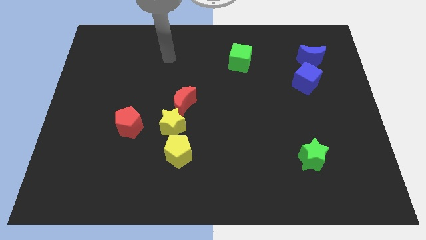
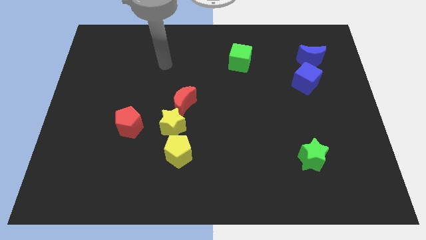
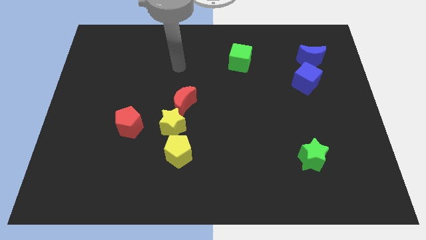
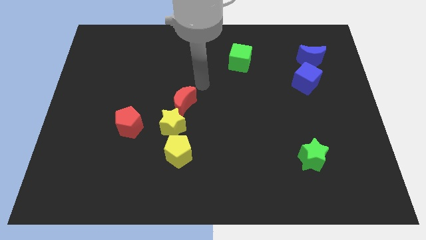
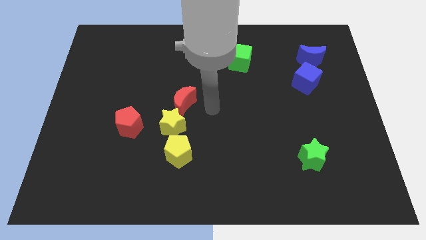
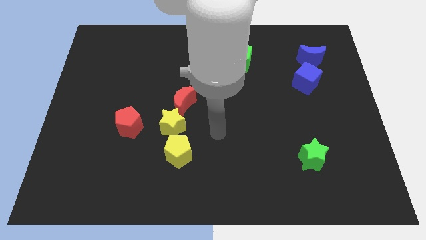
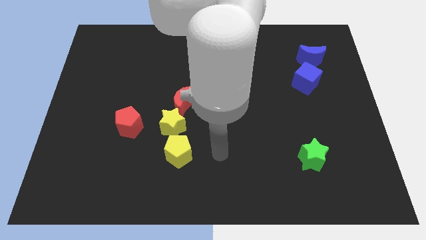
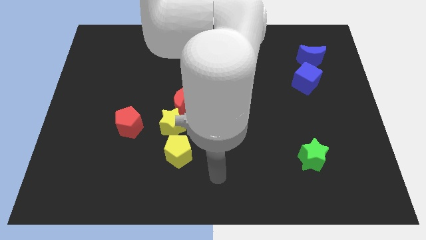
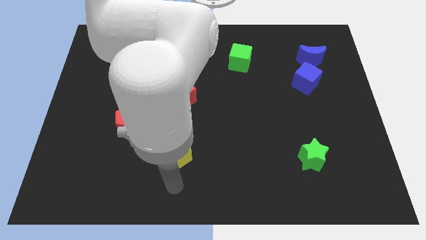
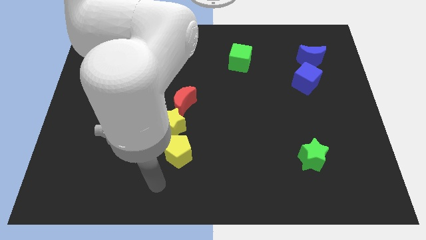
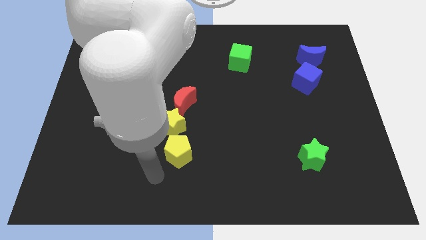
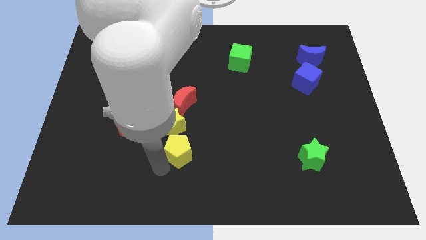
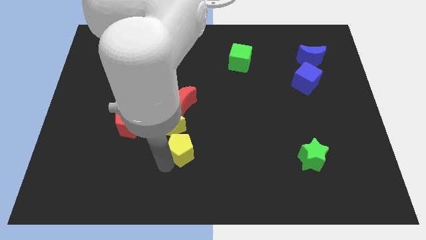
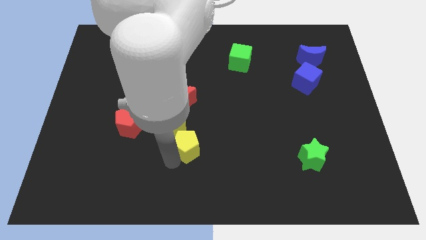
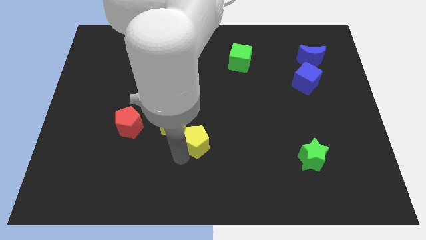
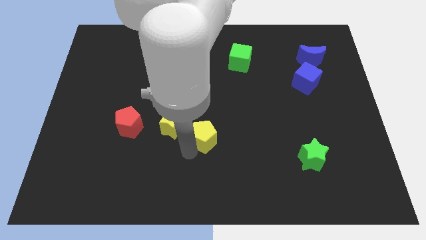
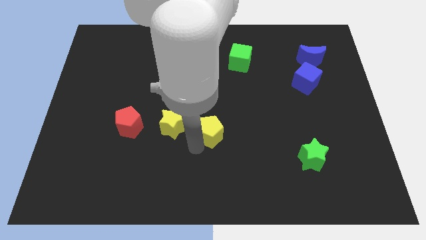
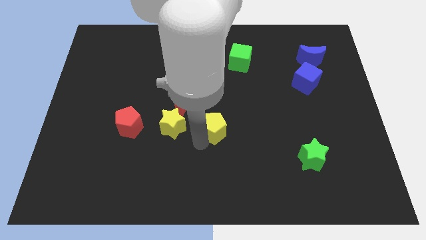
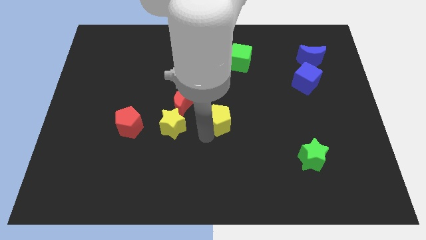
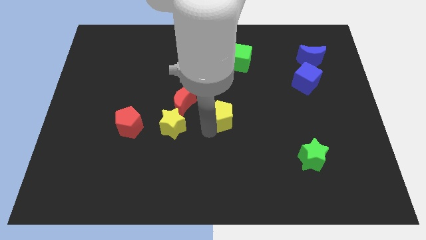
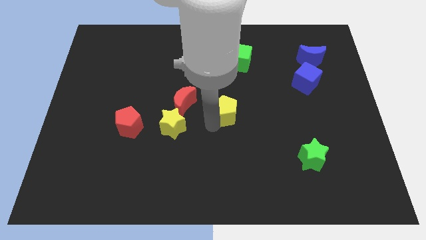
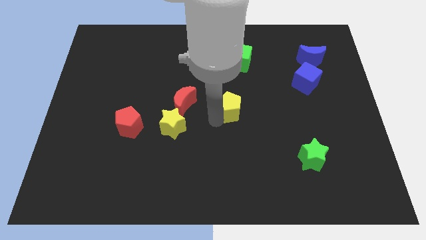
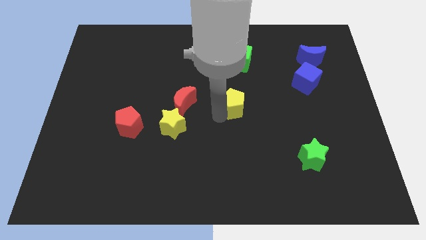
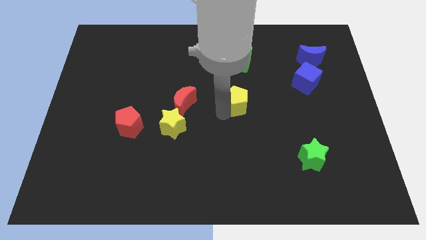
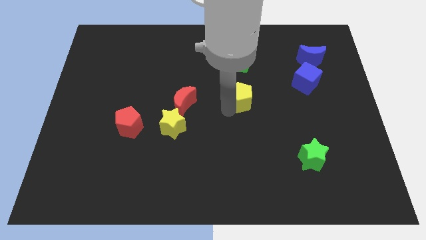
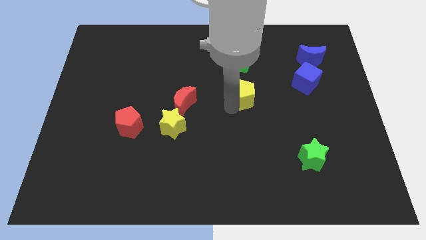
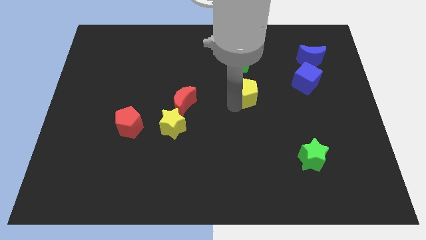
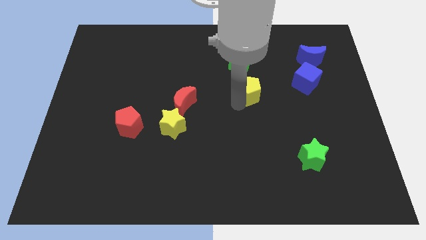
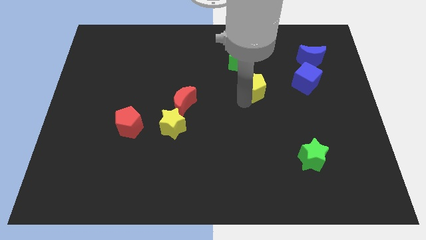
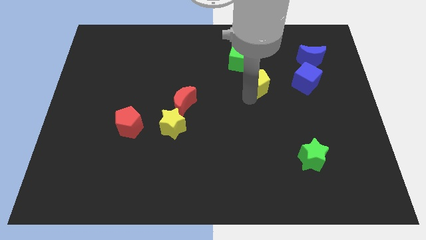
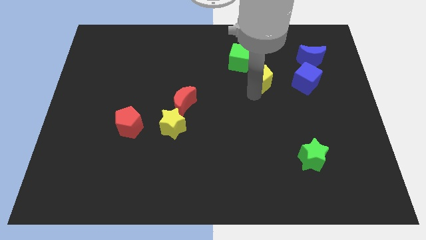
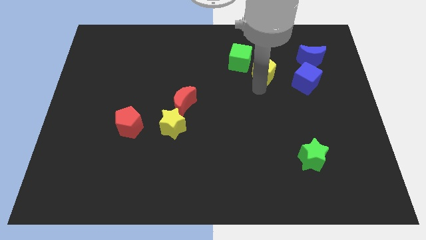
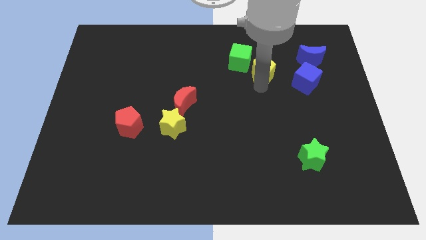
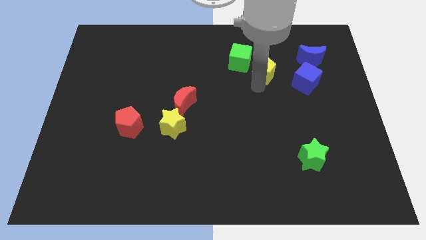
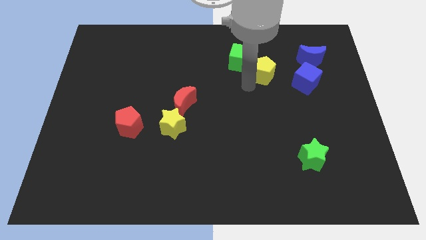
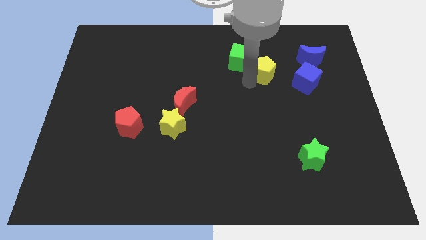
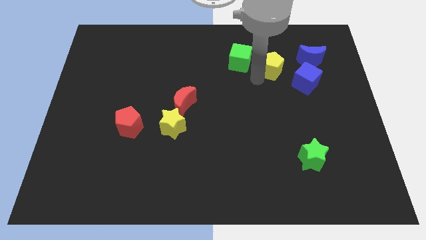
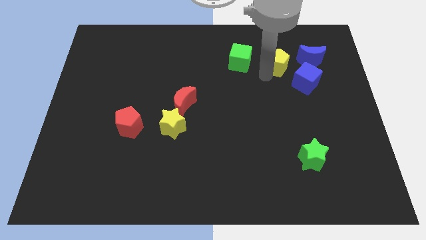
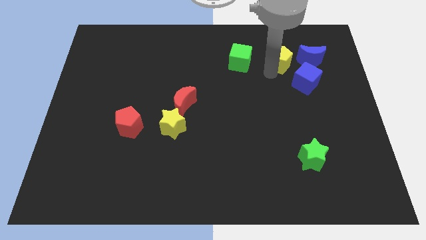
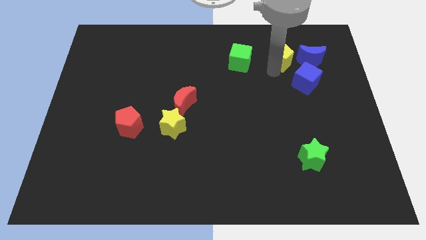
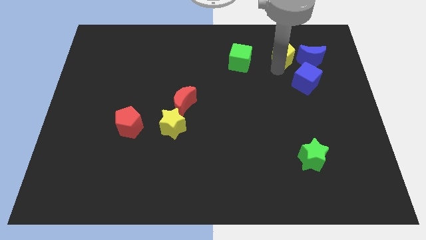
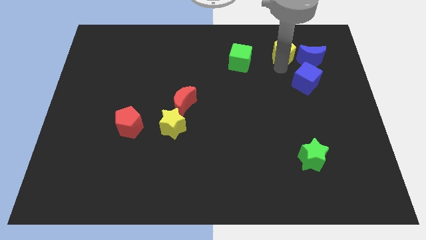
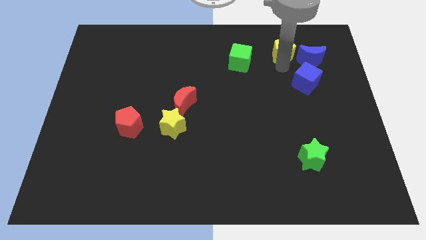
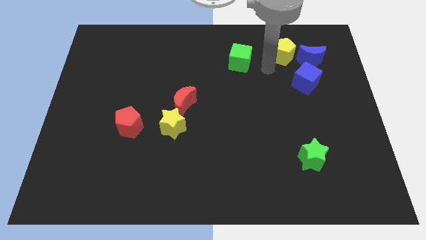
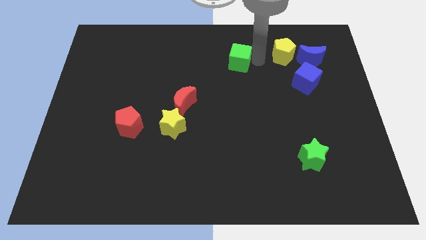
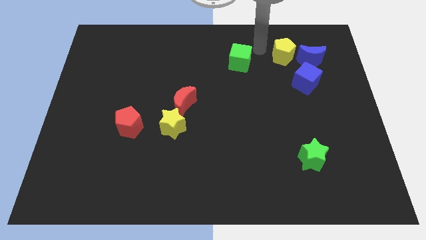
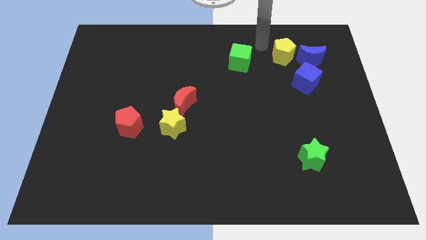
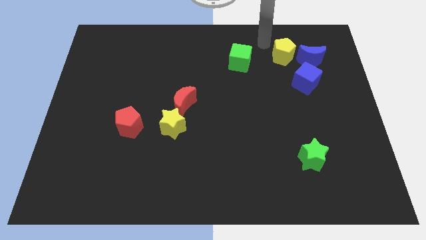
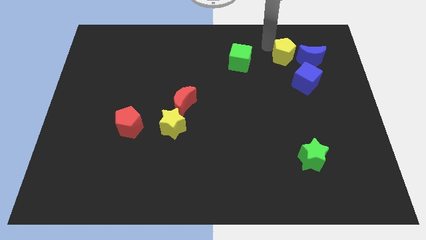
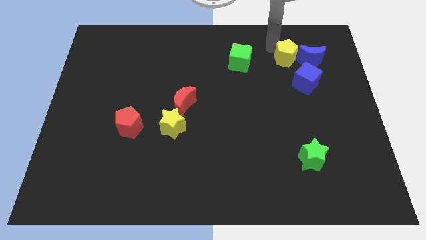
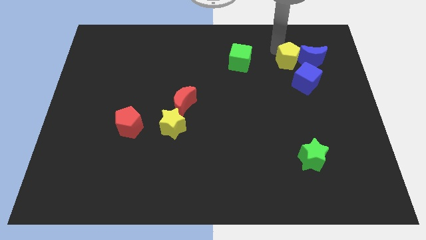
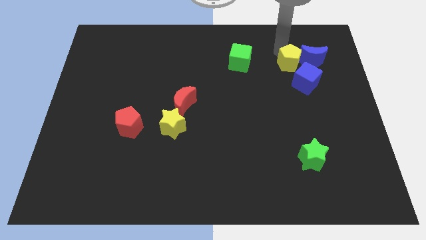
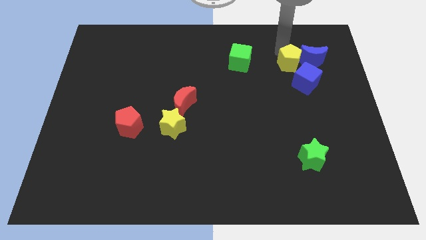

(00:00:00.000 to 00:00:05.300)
push the yellow pentagon to the blue moon

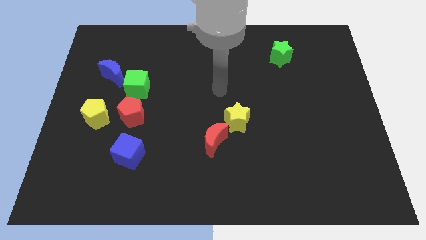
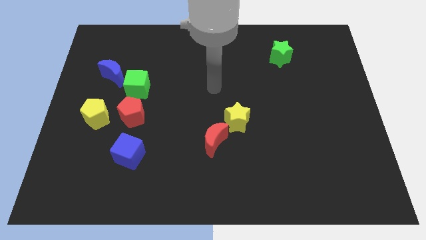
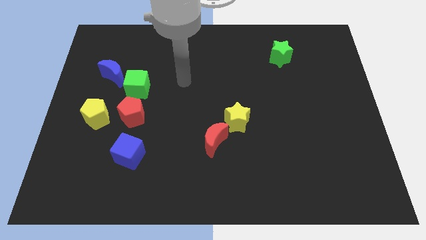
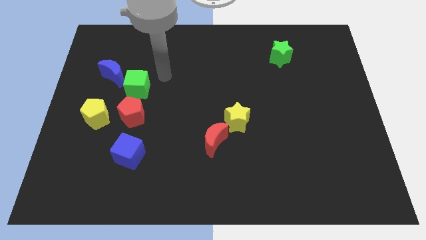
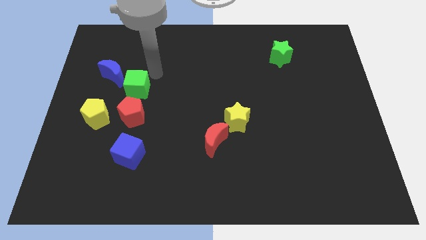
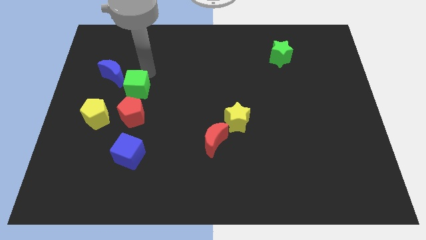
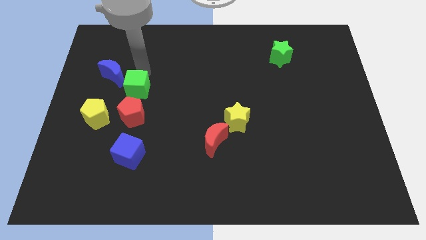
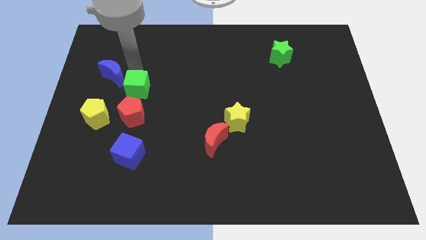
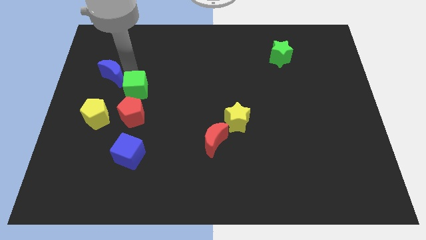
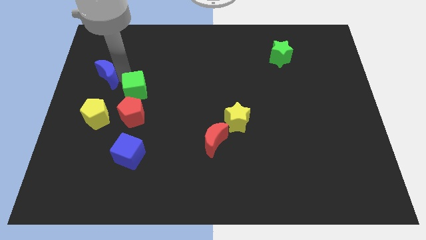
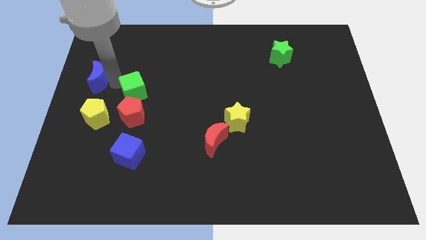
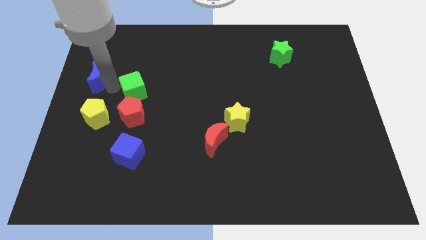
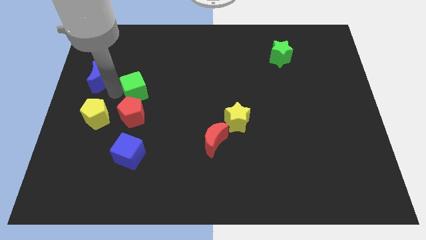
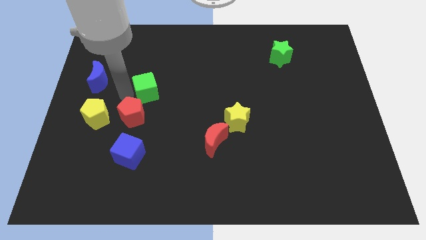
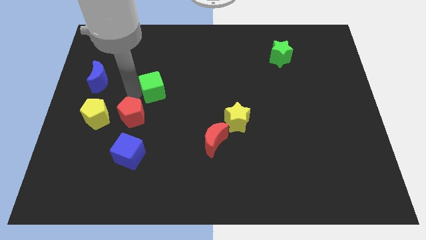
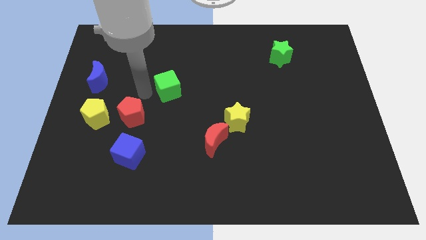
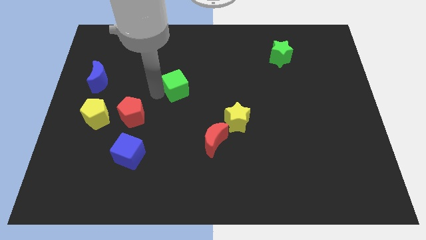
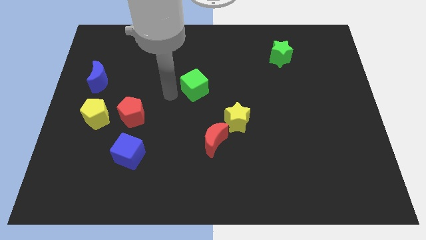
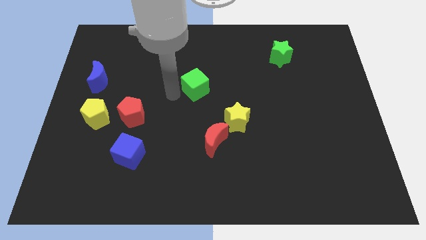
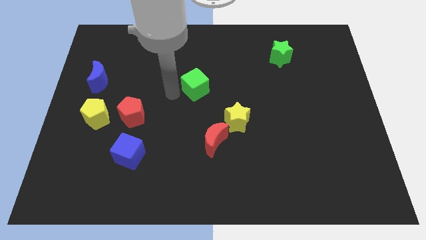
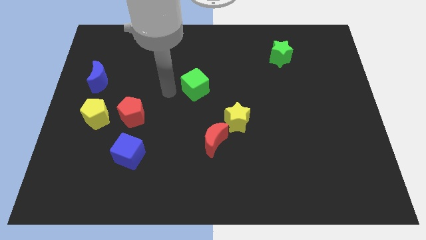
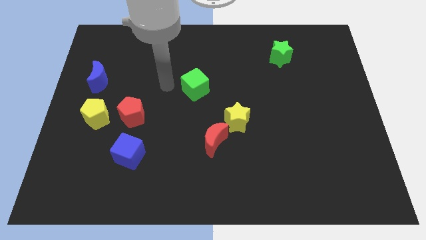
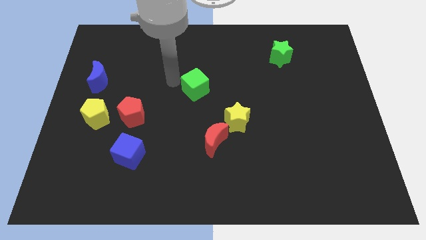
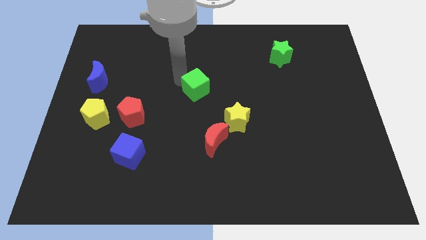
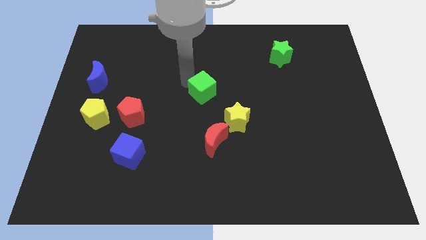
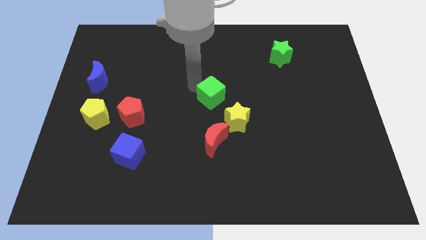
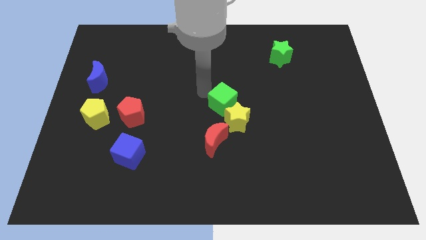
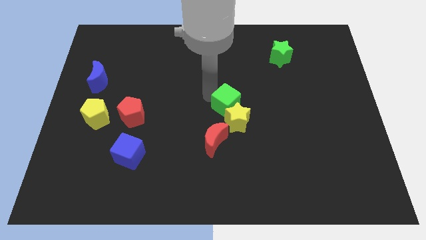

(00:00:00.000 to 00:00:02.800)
put the green cube towards the yellow star

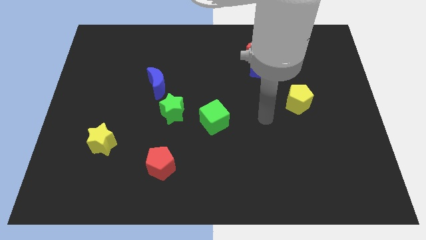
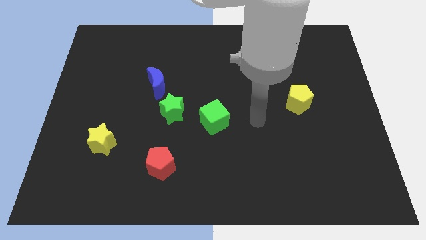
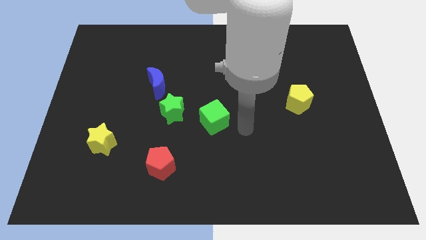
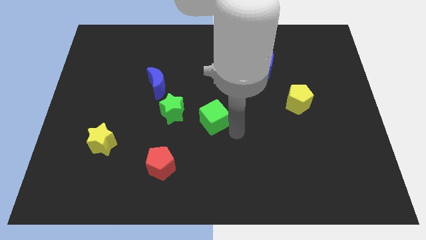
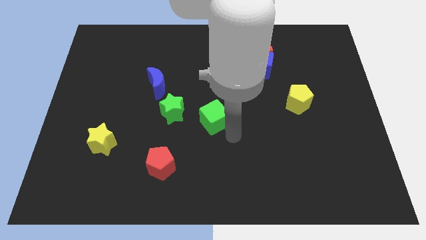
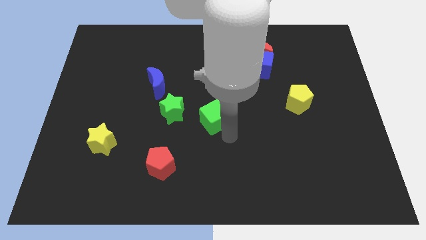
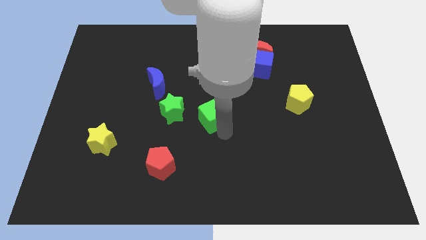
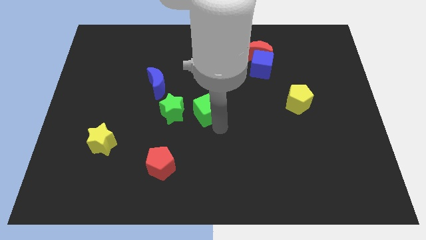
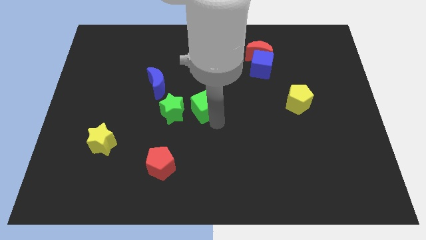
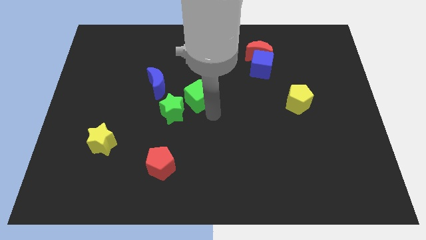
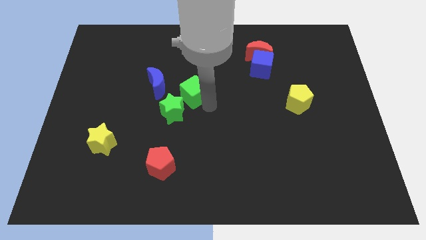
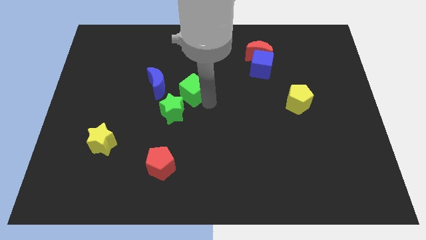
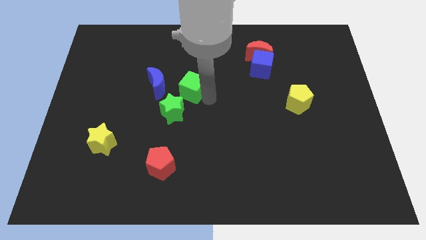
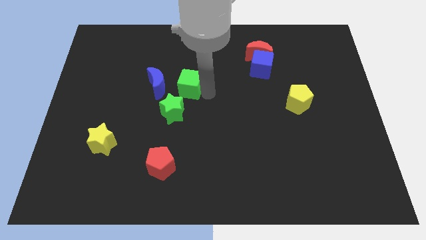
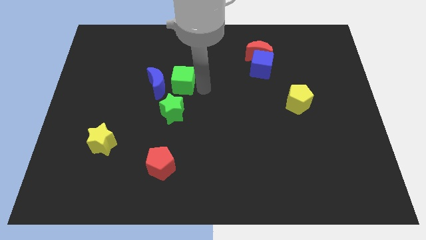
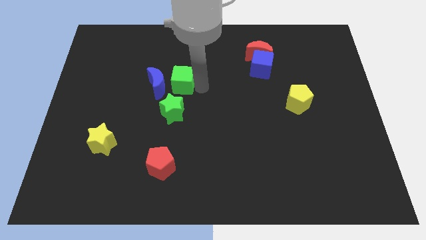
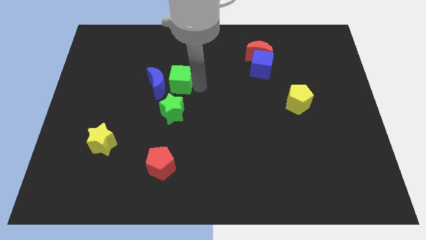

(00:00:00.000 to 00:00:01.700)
move the green cube close to the blue moon
